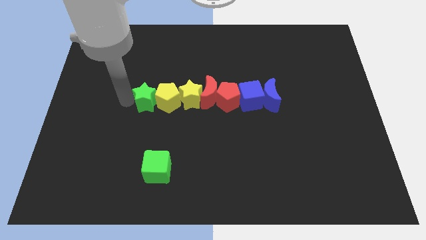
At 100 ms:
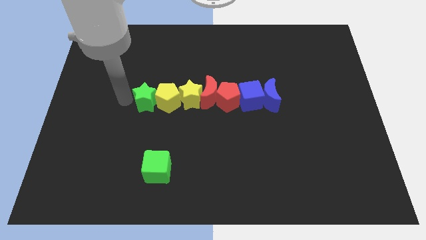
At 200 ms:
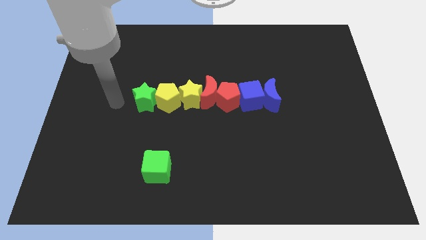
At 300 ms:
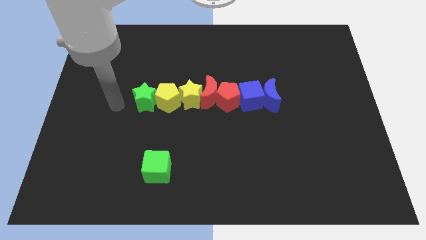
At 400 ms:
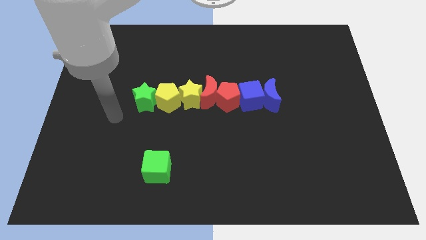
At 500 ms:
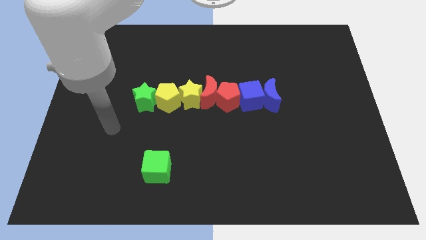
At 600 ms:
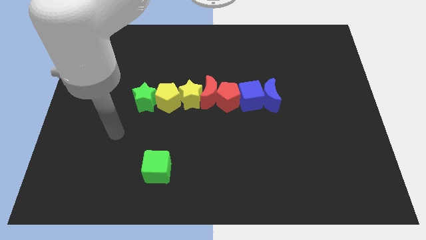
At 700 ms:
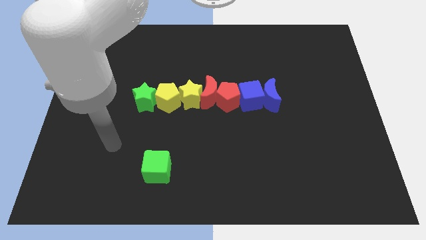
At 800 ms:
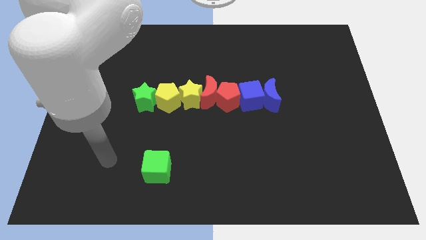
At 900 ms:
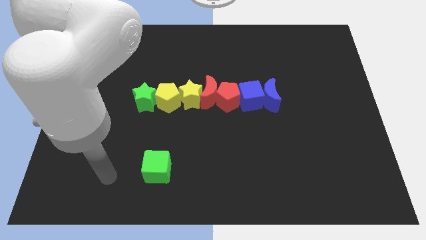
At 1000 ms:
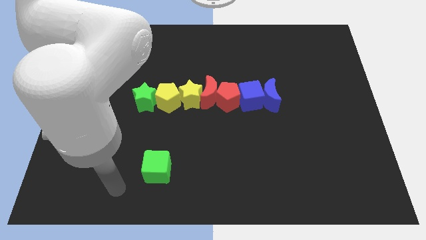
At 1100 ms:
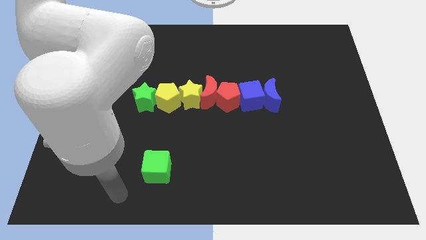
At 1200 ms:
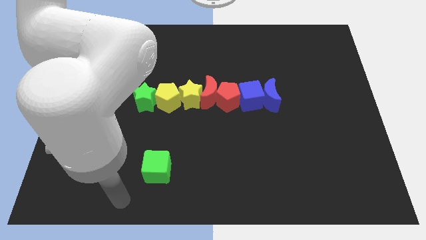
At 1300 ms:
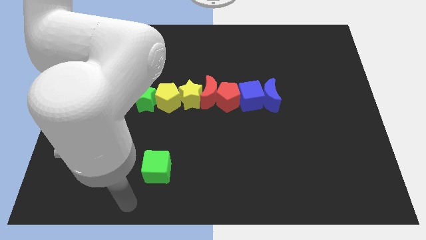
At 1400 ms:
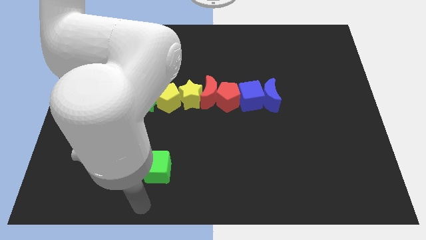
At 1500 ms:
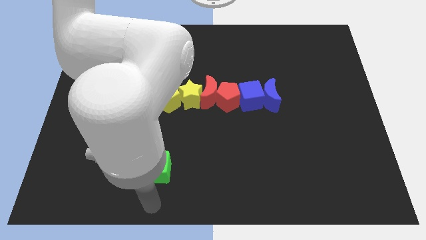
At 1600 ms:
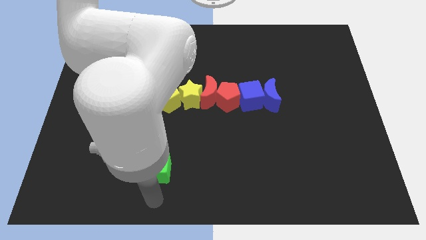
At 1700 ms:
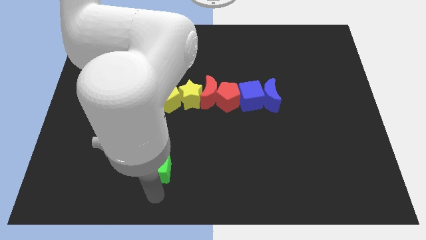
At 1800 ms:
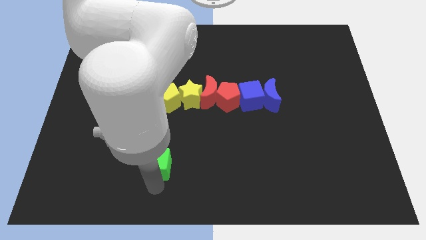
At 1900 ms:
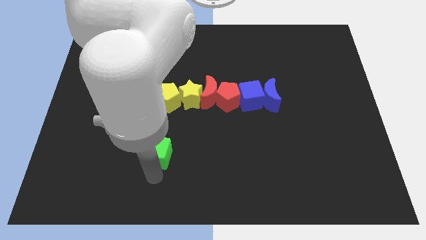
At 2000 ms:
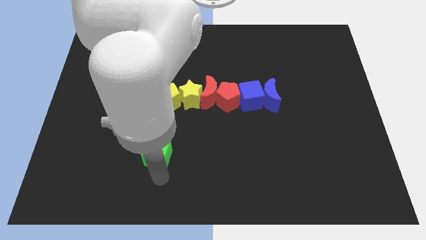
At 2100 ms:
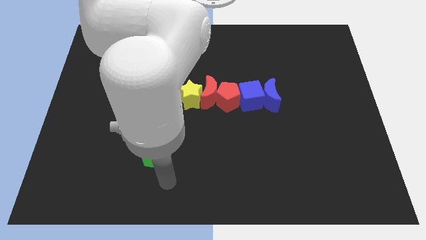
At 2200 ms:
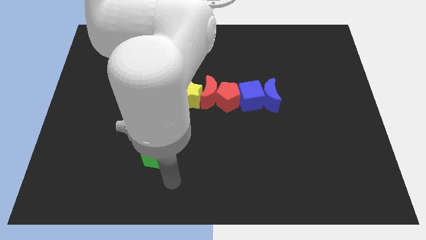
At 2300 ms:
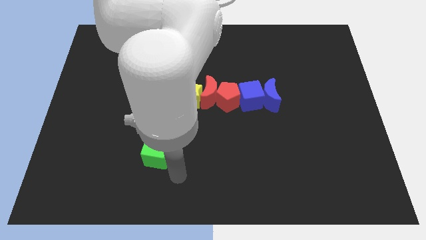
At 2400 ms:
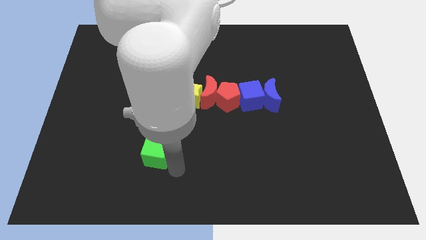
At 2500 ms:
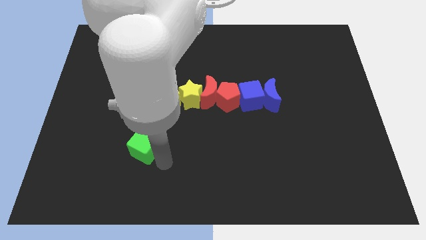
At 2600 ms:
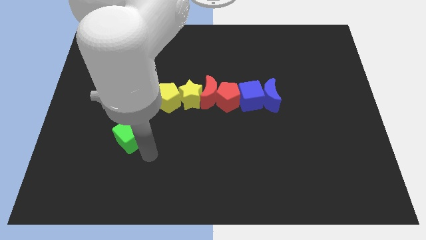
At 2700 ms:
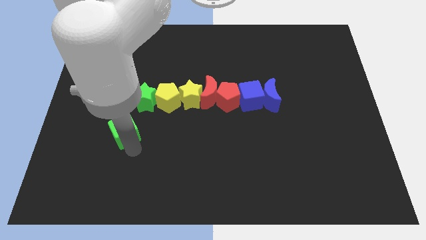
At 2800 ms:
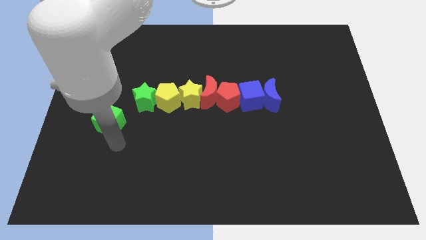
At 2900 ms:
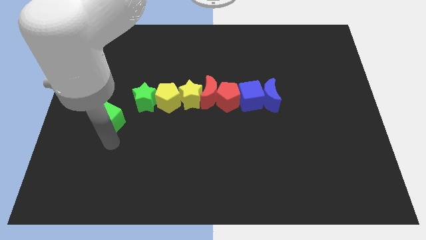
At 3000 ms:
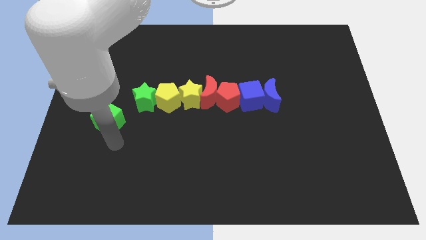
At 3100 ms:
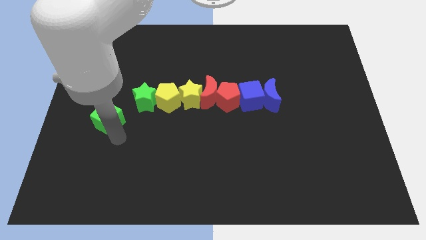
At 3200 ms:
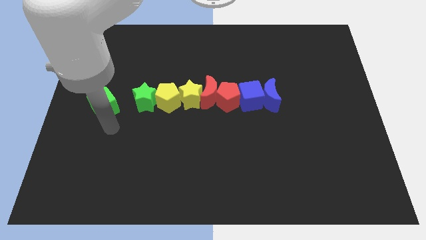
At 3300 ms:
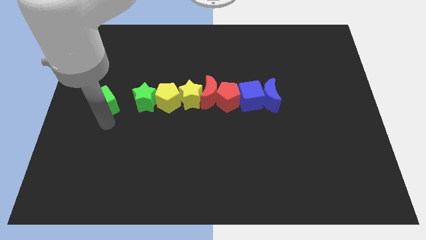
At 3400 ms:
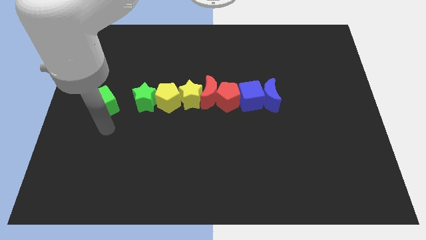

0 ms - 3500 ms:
push the green cube parallel left to the green star

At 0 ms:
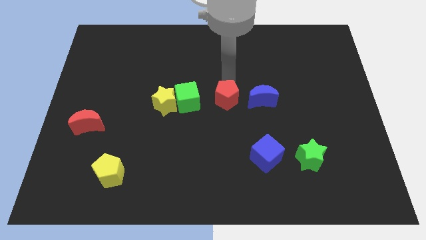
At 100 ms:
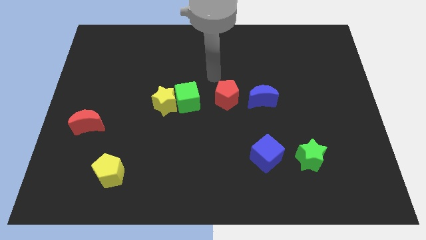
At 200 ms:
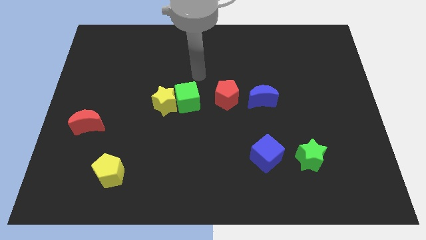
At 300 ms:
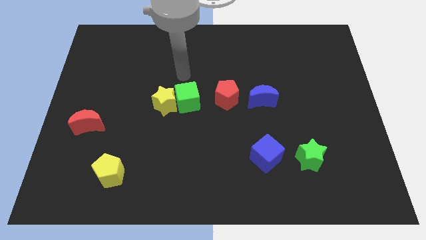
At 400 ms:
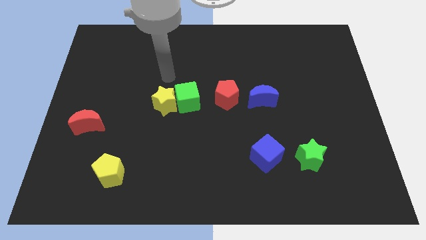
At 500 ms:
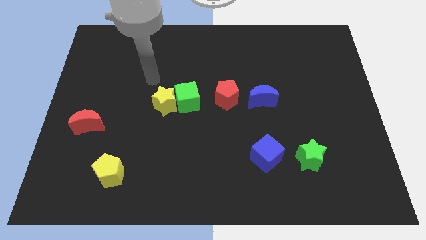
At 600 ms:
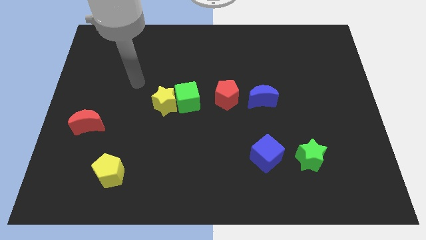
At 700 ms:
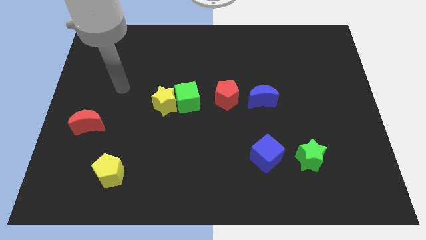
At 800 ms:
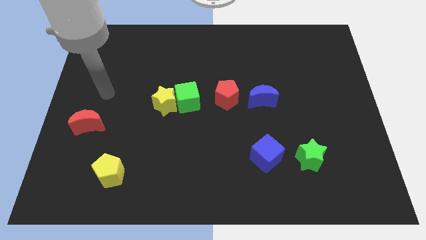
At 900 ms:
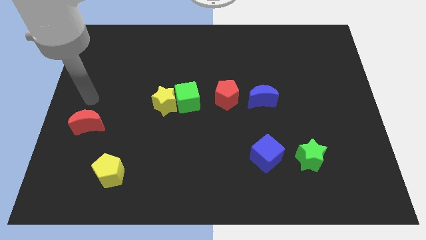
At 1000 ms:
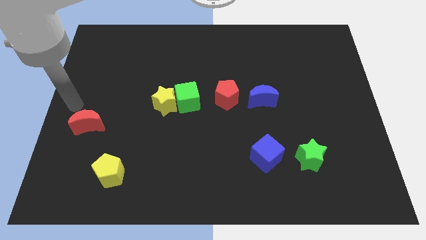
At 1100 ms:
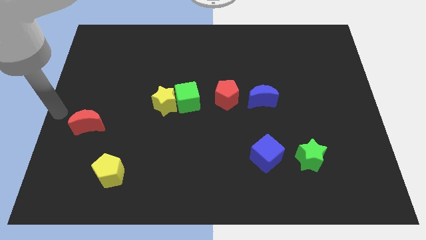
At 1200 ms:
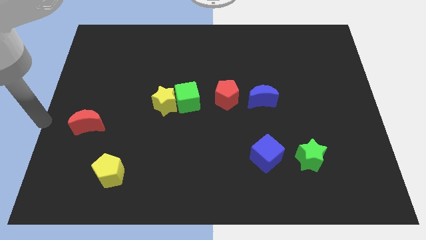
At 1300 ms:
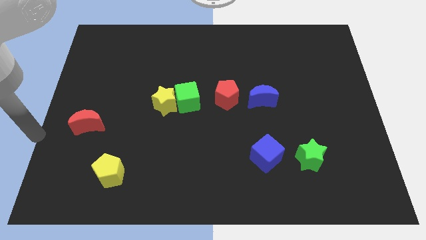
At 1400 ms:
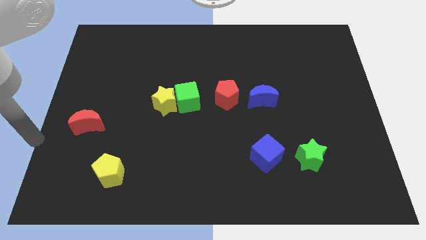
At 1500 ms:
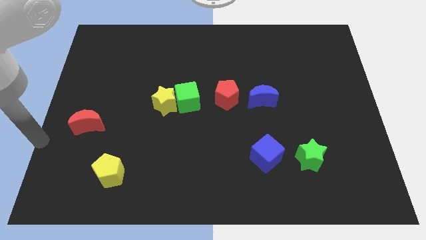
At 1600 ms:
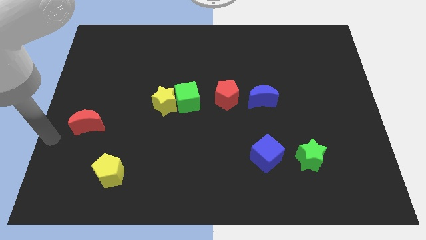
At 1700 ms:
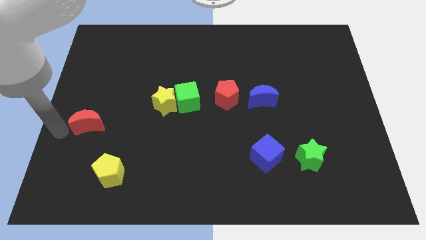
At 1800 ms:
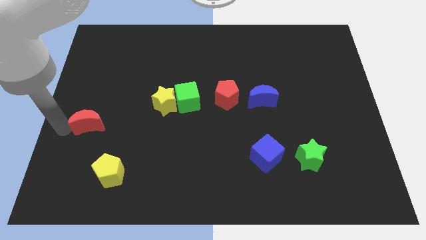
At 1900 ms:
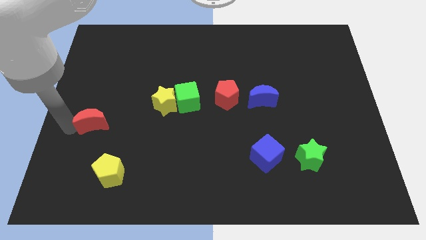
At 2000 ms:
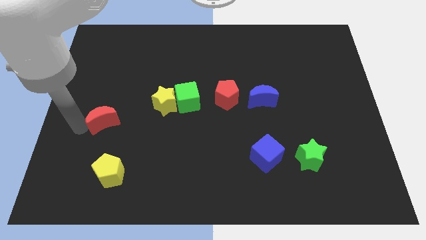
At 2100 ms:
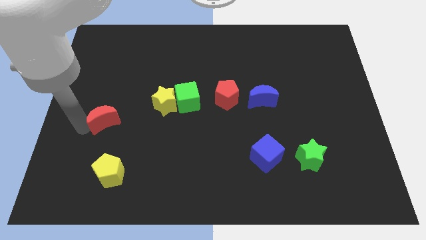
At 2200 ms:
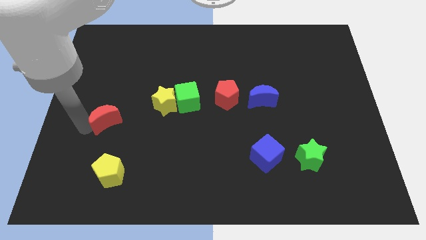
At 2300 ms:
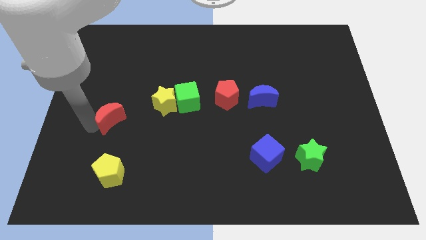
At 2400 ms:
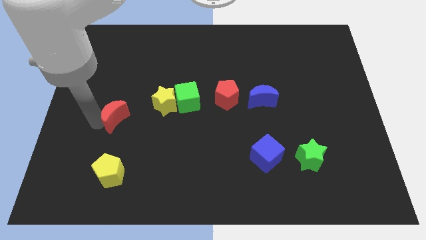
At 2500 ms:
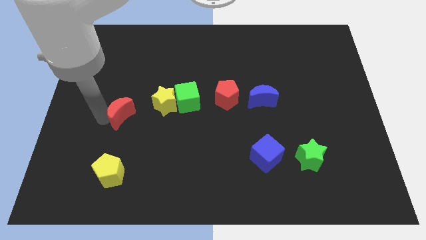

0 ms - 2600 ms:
move the red crescent towards the yellow star

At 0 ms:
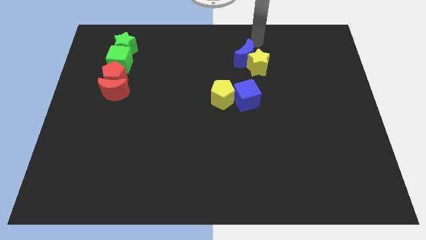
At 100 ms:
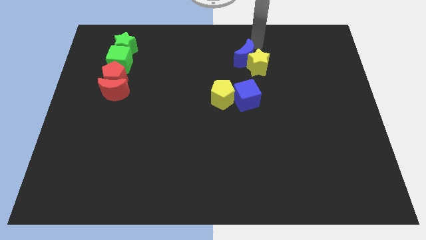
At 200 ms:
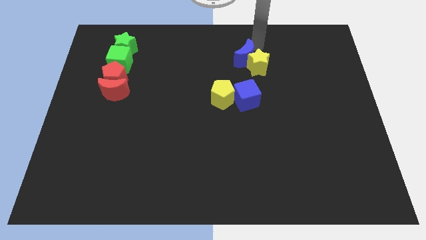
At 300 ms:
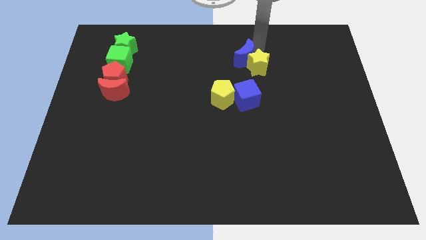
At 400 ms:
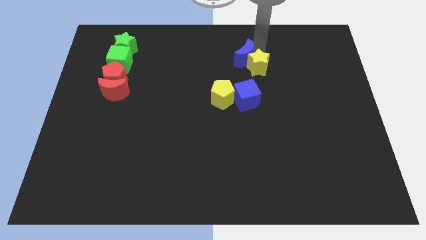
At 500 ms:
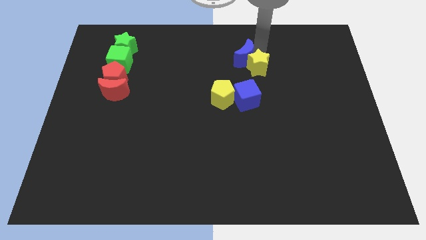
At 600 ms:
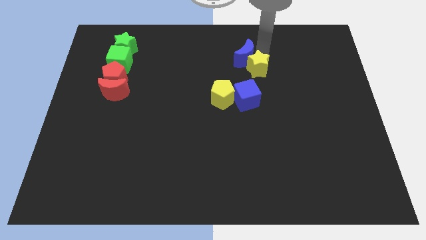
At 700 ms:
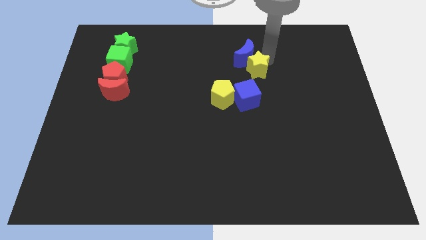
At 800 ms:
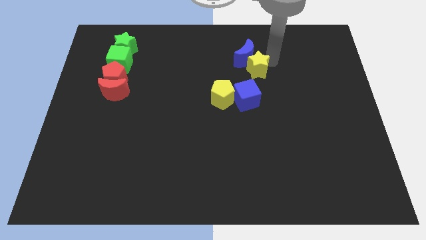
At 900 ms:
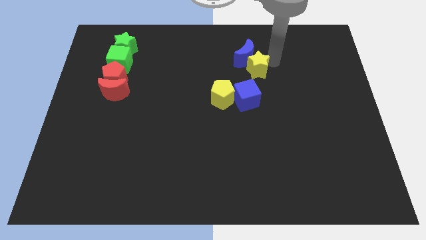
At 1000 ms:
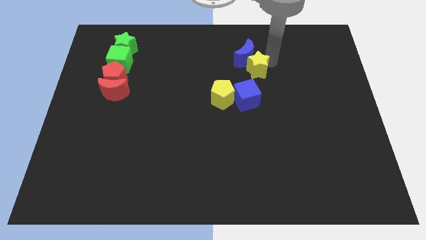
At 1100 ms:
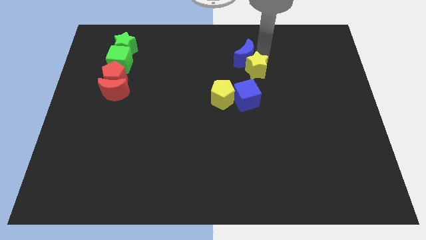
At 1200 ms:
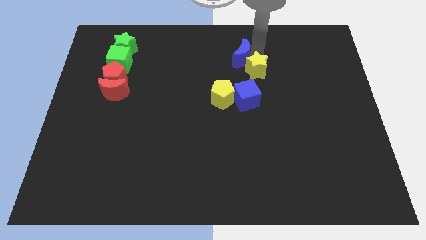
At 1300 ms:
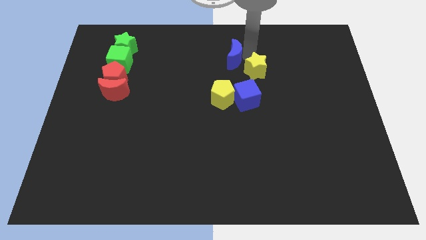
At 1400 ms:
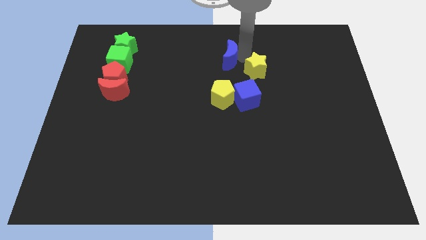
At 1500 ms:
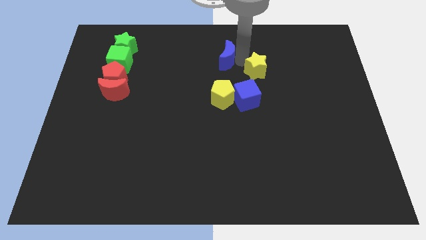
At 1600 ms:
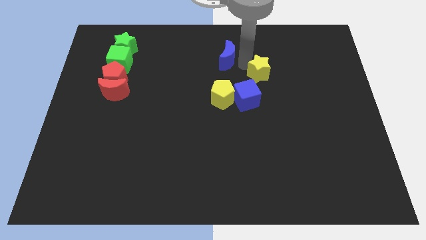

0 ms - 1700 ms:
separate blue crescent from yellow star

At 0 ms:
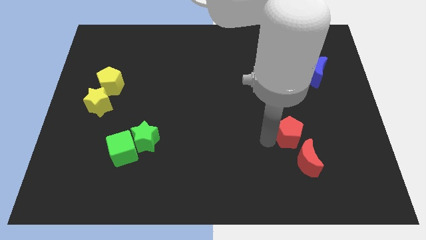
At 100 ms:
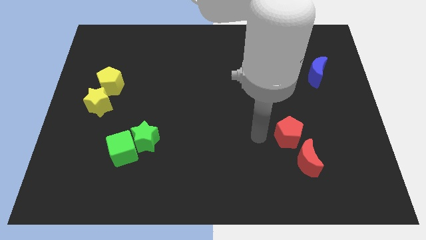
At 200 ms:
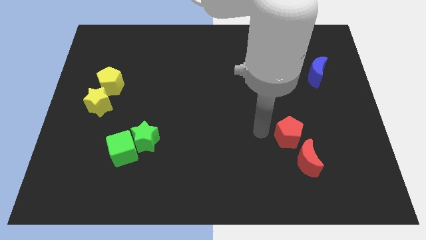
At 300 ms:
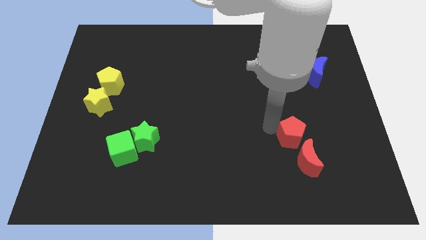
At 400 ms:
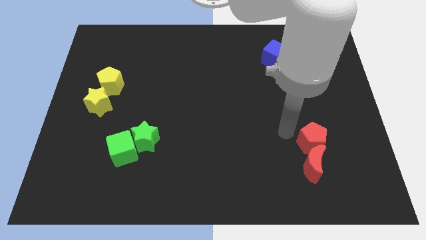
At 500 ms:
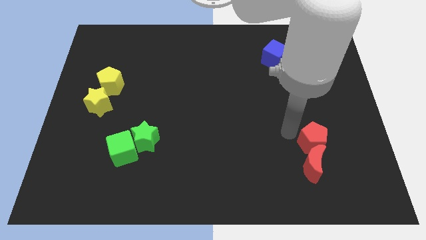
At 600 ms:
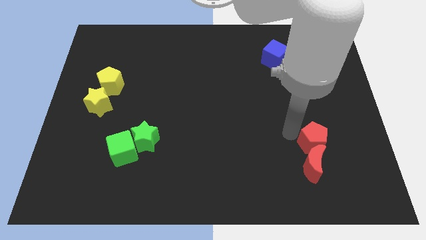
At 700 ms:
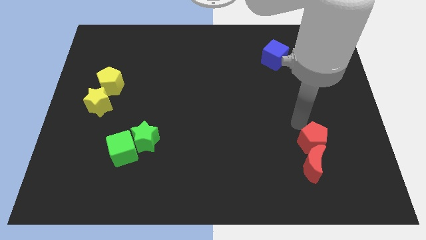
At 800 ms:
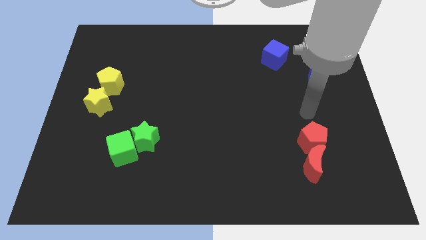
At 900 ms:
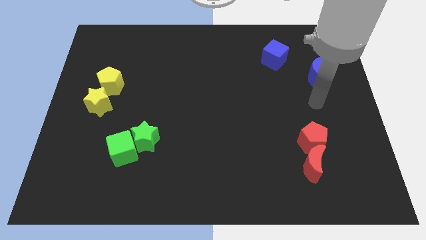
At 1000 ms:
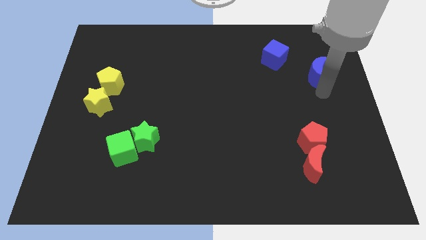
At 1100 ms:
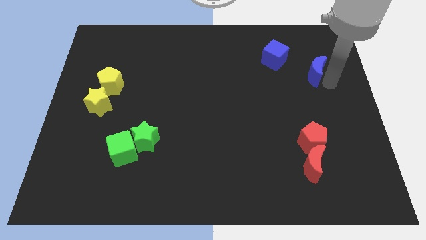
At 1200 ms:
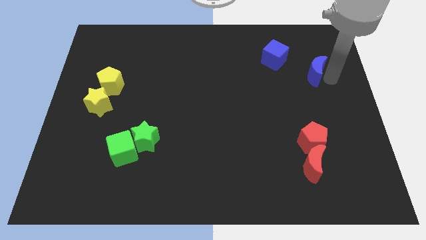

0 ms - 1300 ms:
push the red pentagon towards the red moon
